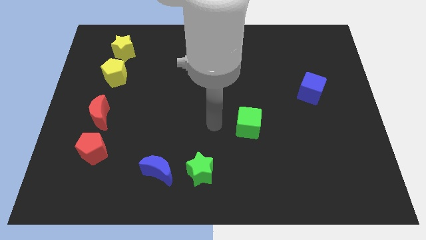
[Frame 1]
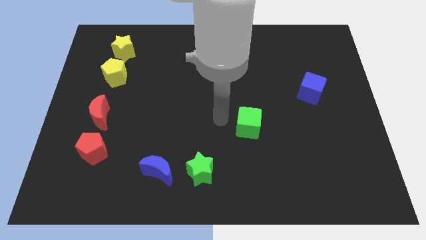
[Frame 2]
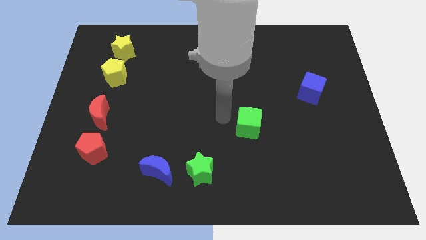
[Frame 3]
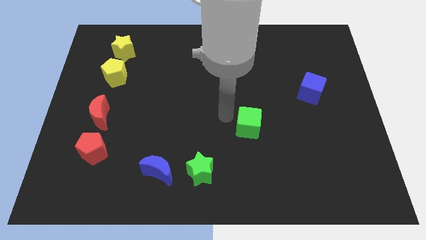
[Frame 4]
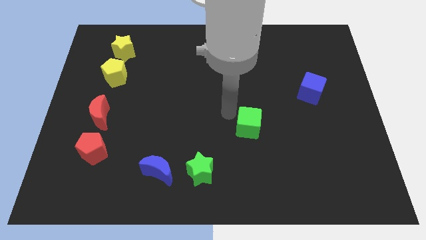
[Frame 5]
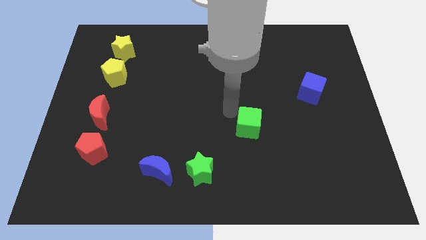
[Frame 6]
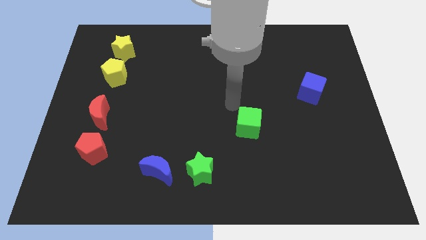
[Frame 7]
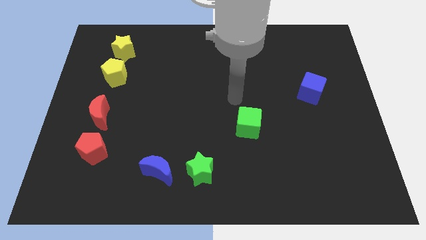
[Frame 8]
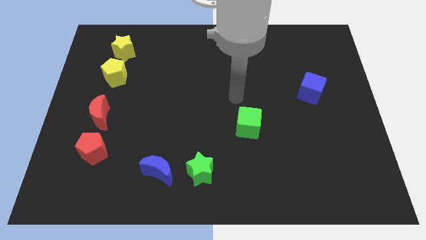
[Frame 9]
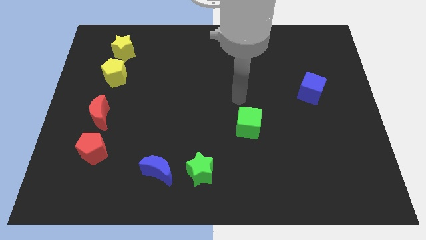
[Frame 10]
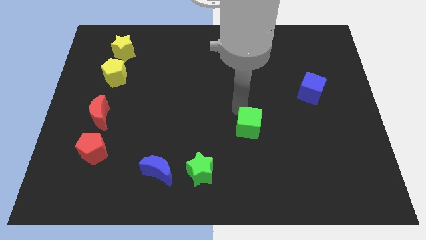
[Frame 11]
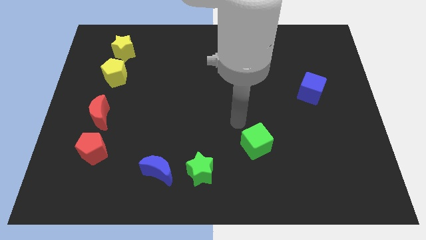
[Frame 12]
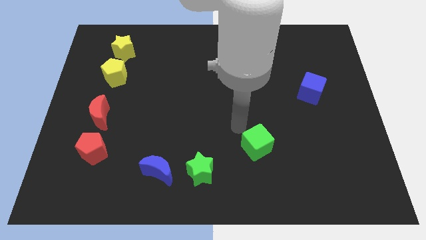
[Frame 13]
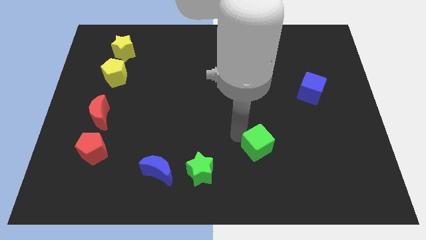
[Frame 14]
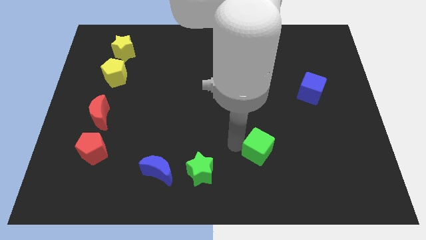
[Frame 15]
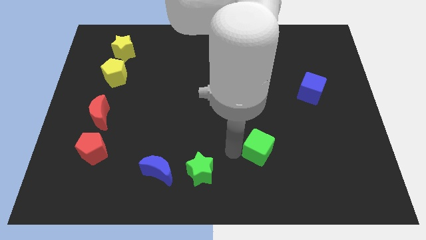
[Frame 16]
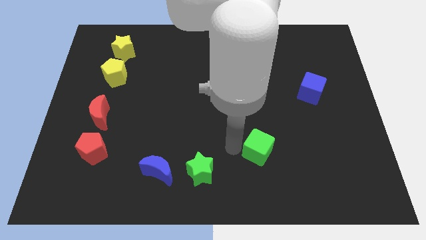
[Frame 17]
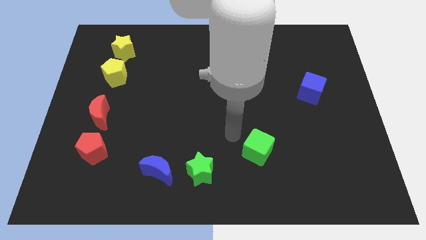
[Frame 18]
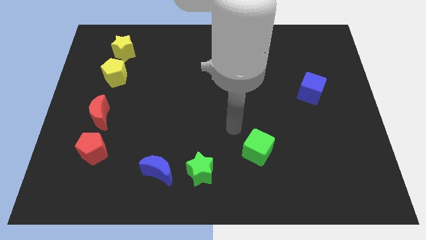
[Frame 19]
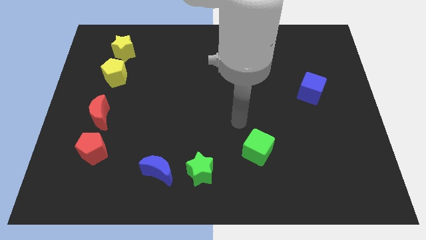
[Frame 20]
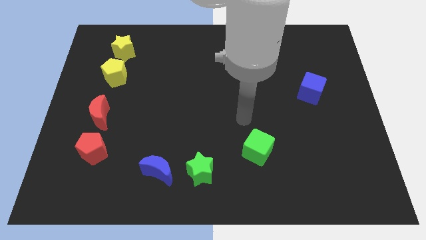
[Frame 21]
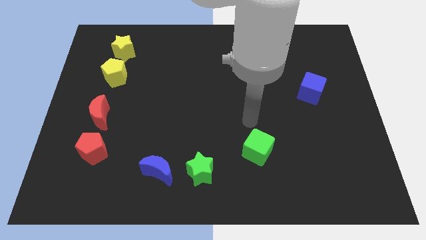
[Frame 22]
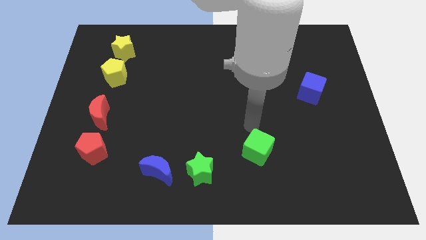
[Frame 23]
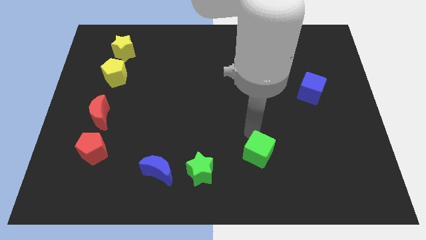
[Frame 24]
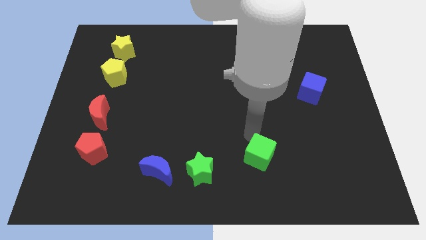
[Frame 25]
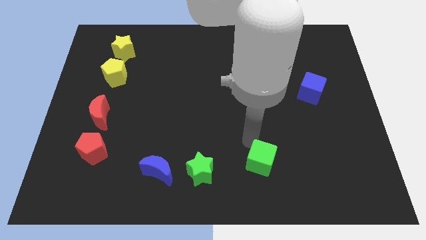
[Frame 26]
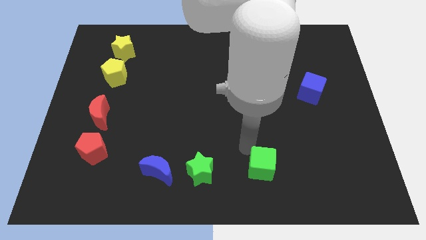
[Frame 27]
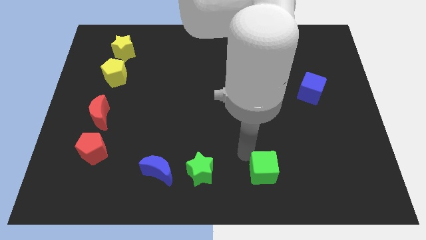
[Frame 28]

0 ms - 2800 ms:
move the green cube to the right of the green star

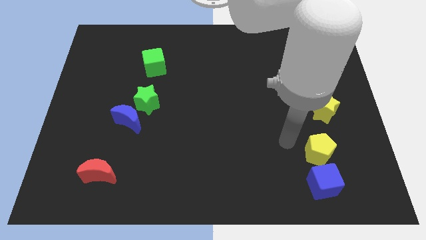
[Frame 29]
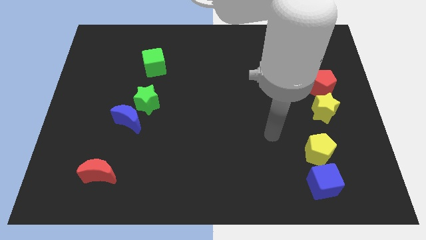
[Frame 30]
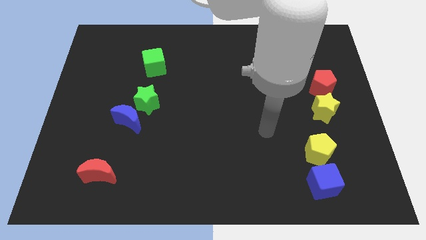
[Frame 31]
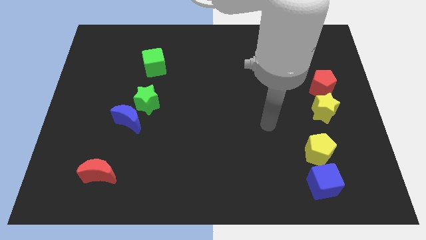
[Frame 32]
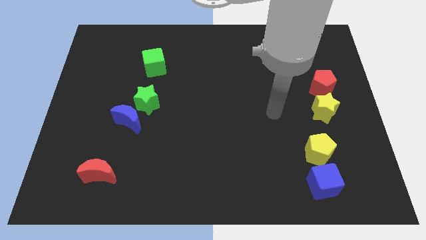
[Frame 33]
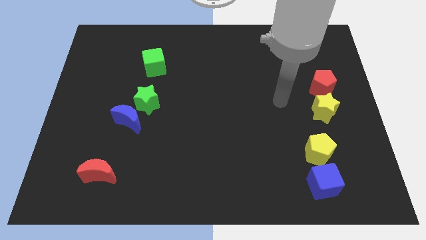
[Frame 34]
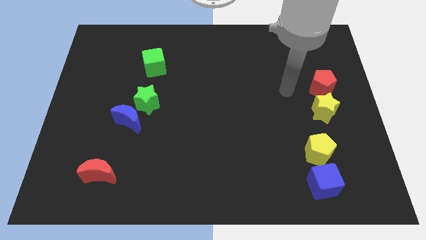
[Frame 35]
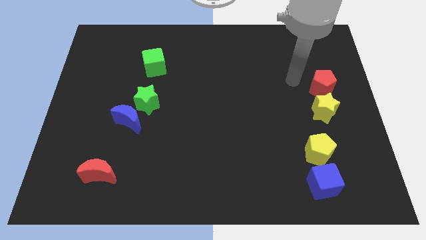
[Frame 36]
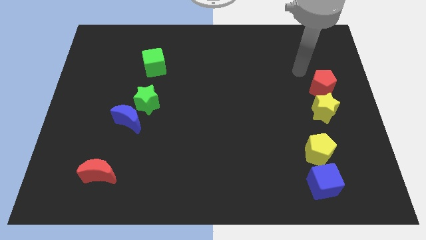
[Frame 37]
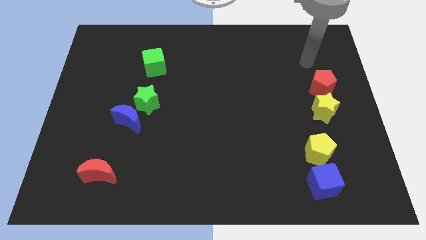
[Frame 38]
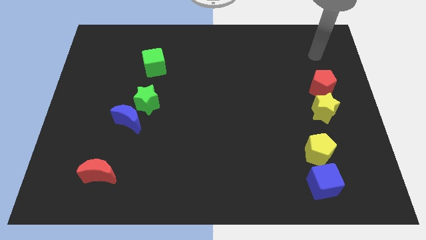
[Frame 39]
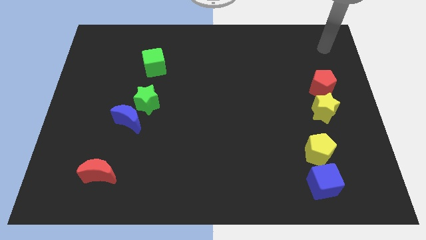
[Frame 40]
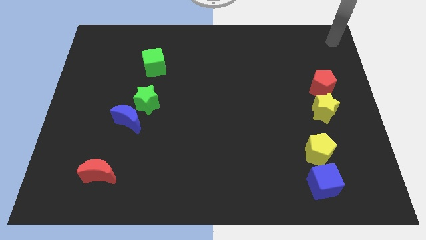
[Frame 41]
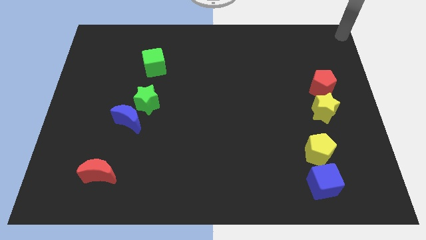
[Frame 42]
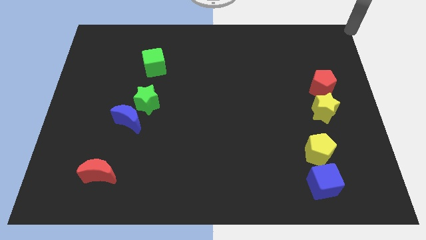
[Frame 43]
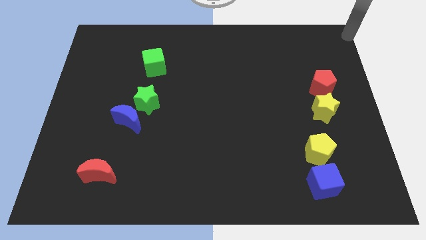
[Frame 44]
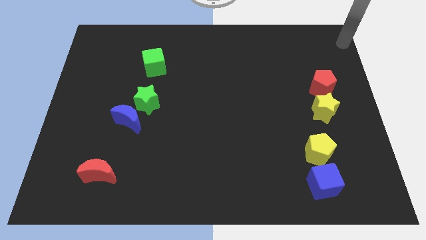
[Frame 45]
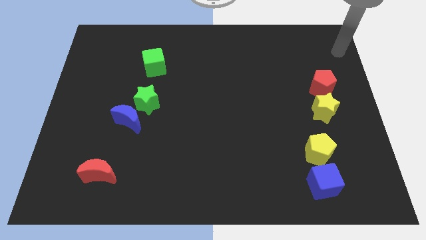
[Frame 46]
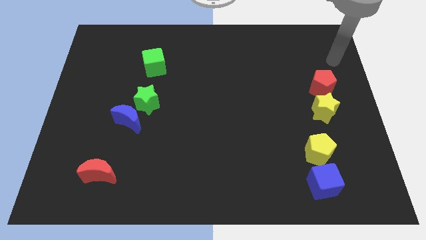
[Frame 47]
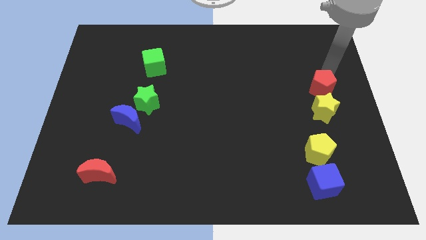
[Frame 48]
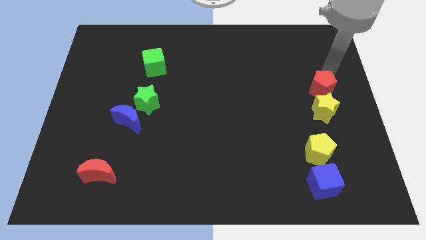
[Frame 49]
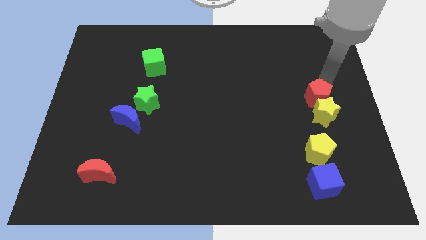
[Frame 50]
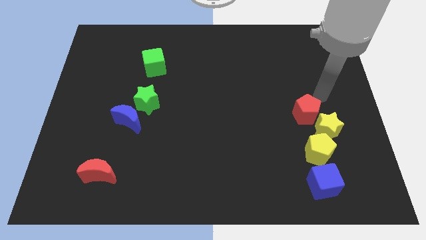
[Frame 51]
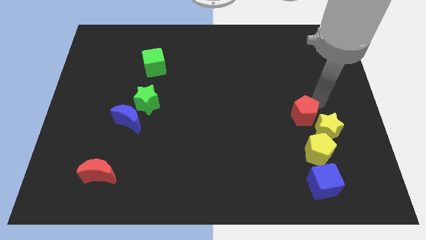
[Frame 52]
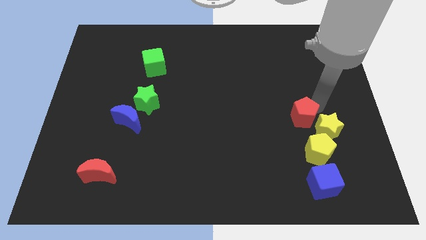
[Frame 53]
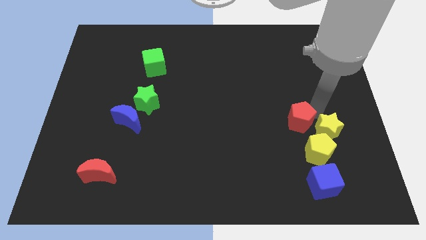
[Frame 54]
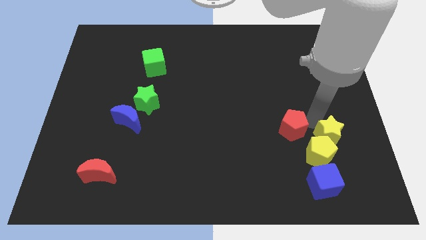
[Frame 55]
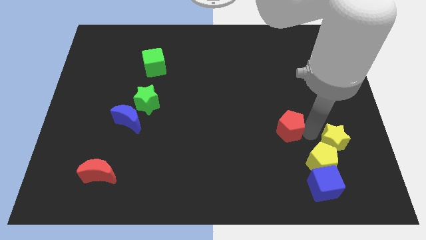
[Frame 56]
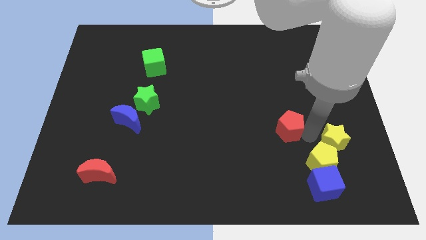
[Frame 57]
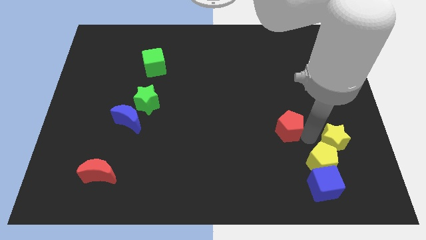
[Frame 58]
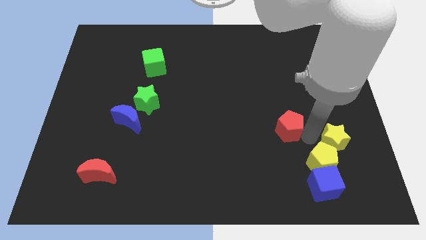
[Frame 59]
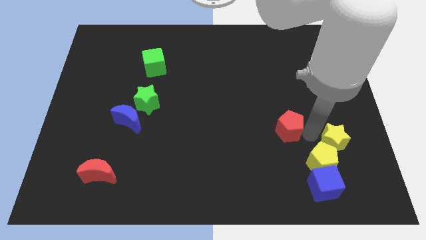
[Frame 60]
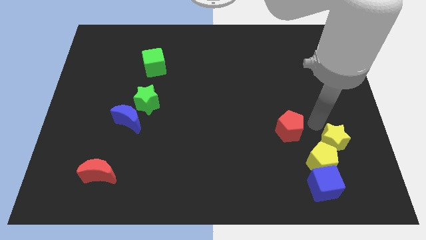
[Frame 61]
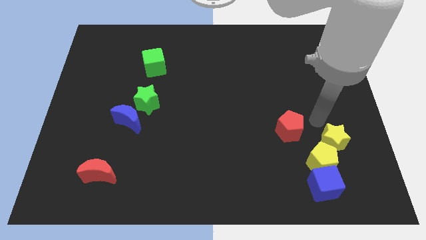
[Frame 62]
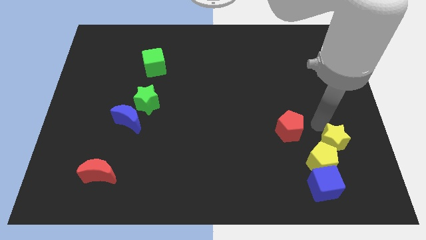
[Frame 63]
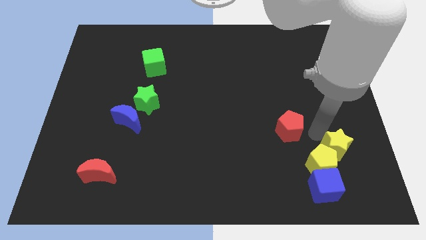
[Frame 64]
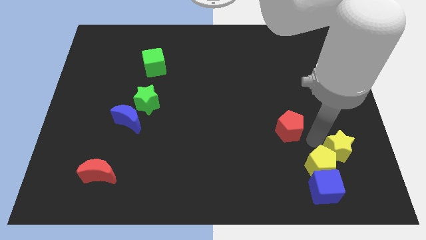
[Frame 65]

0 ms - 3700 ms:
separate red pentagon and yellow star

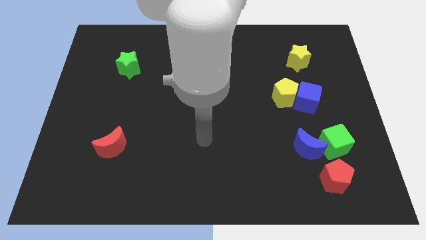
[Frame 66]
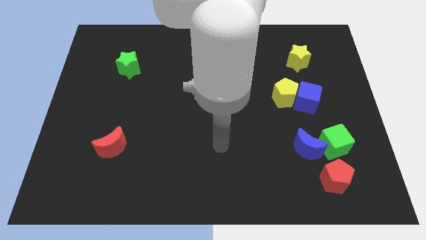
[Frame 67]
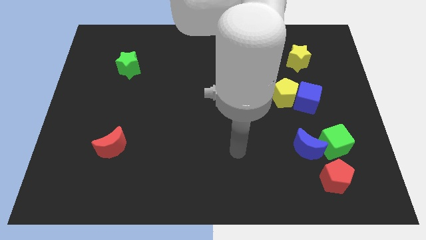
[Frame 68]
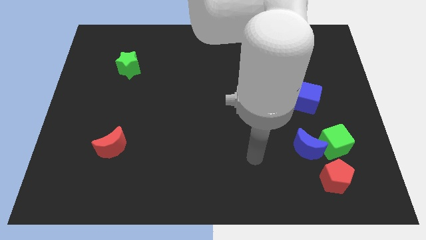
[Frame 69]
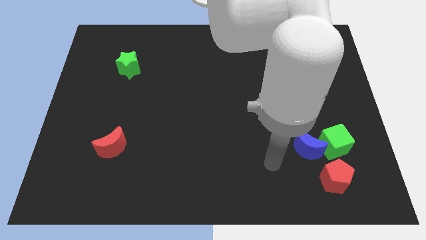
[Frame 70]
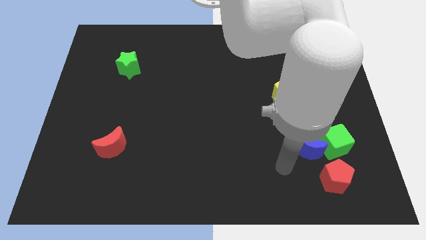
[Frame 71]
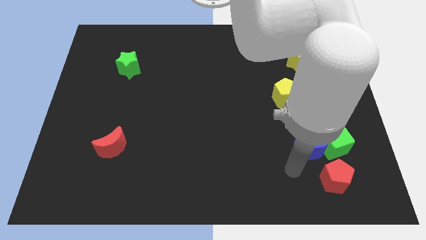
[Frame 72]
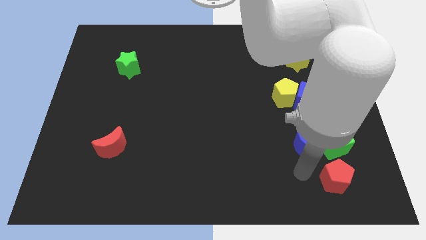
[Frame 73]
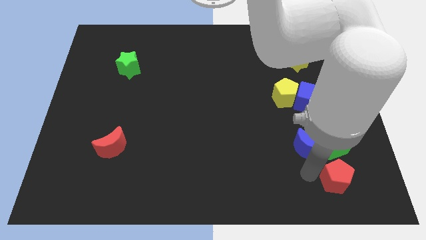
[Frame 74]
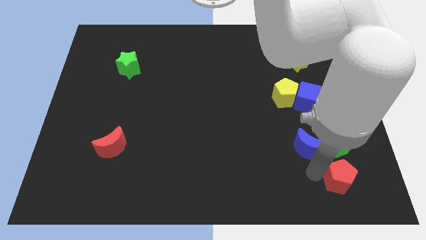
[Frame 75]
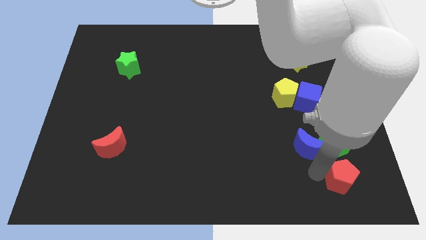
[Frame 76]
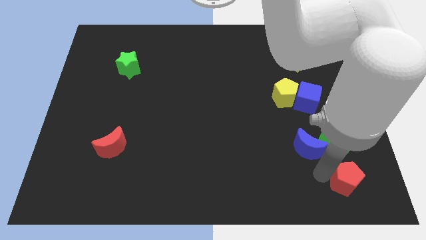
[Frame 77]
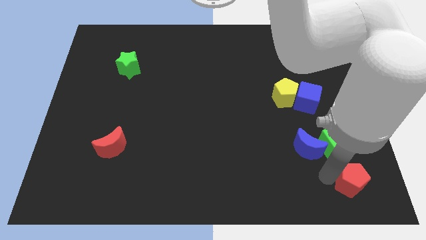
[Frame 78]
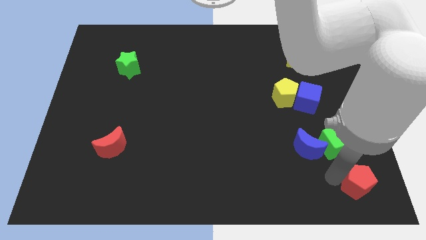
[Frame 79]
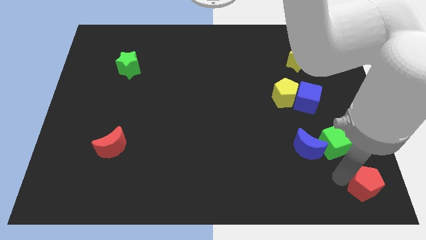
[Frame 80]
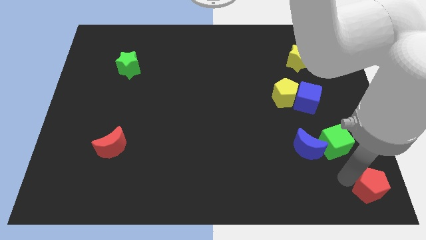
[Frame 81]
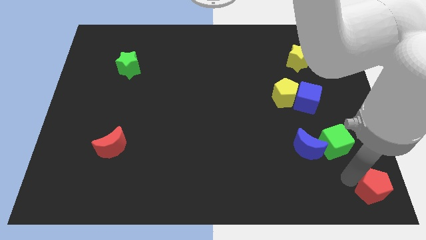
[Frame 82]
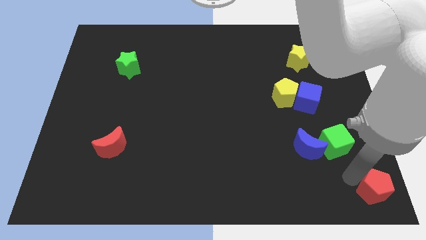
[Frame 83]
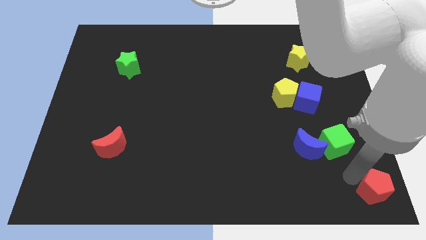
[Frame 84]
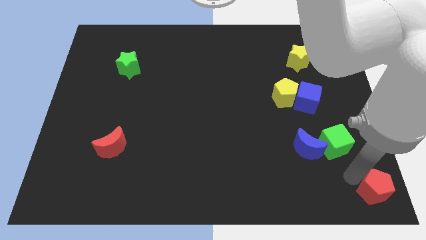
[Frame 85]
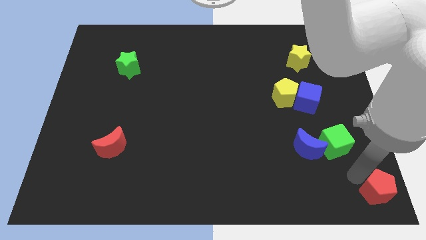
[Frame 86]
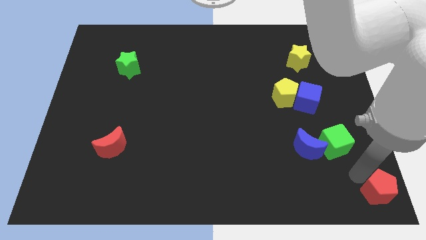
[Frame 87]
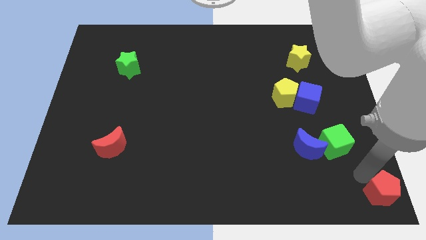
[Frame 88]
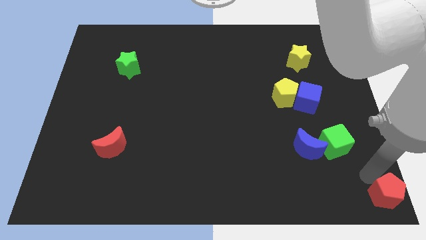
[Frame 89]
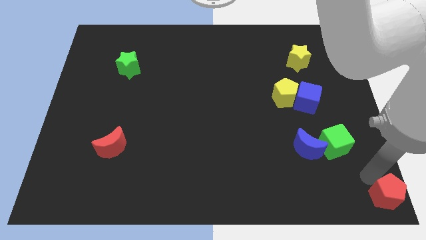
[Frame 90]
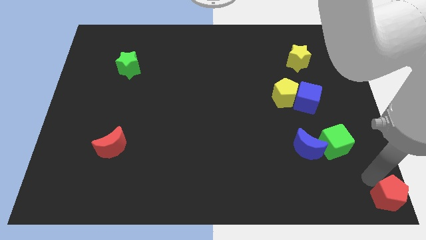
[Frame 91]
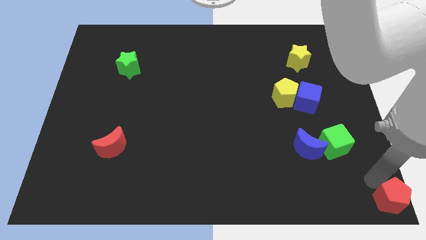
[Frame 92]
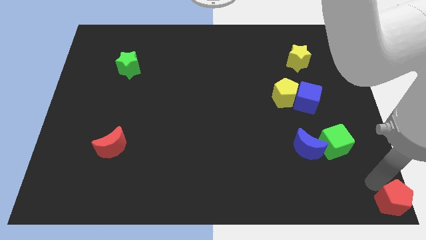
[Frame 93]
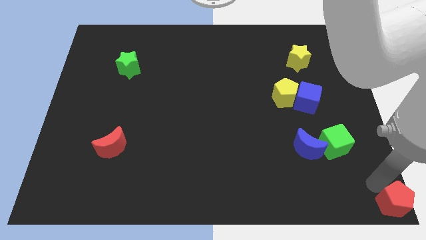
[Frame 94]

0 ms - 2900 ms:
move the red pentagon to the bottom right corner
